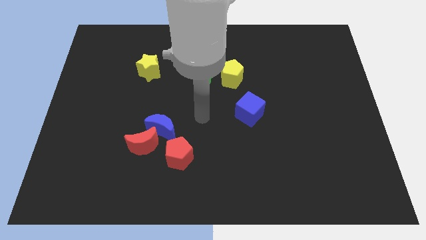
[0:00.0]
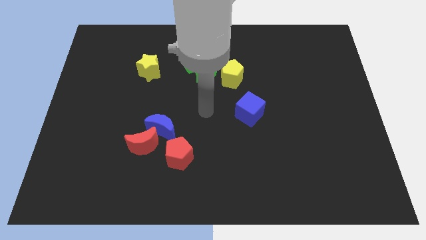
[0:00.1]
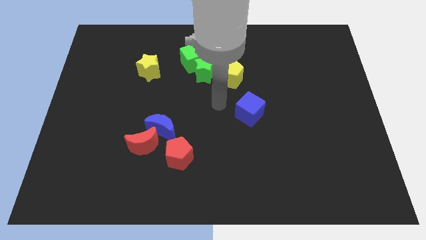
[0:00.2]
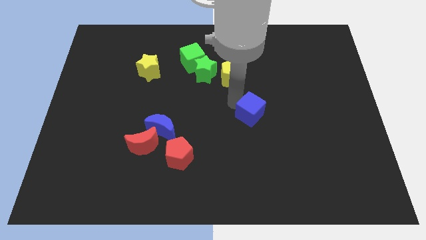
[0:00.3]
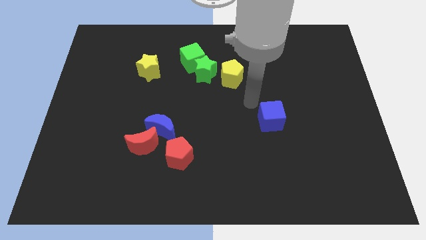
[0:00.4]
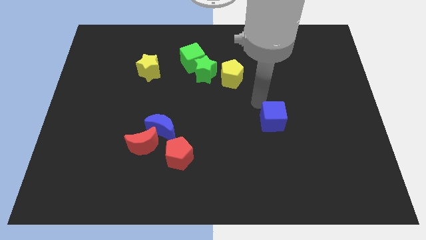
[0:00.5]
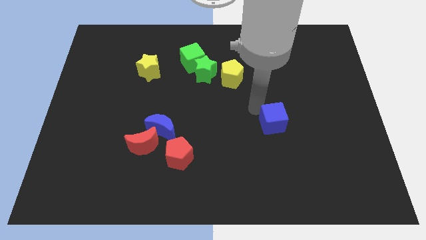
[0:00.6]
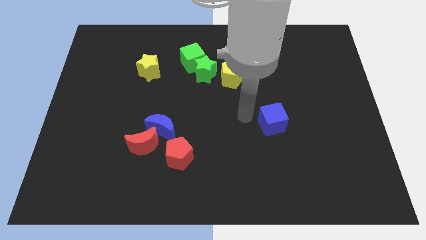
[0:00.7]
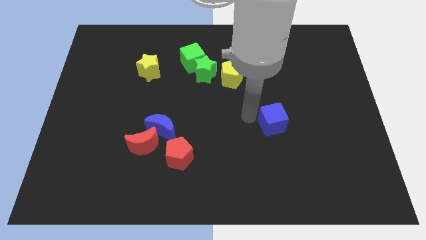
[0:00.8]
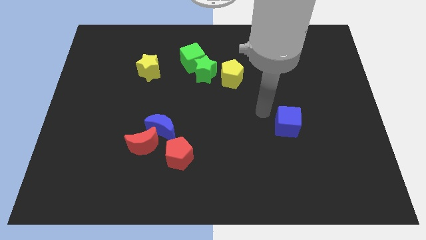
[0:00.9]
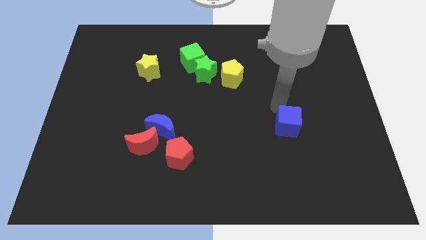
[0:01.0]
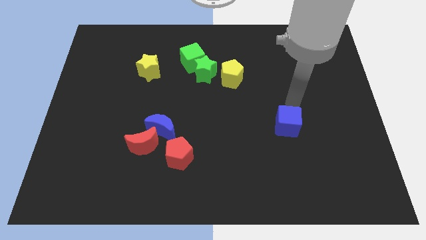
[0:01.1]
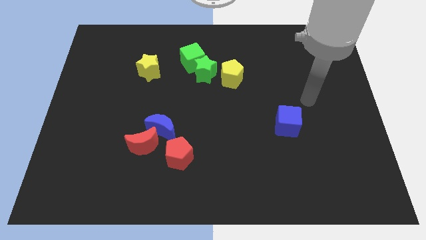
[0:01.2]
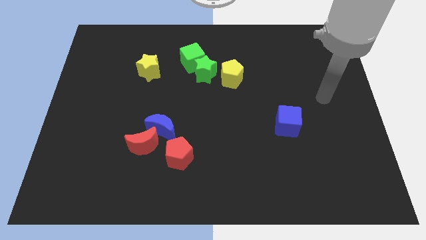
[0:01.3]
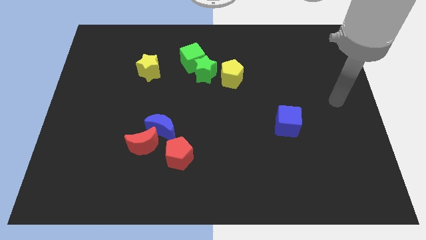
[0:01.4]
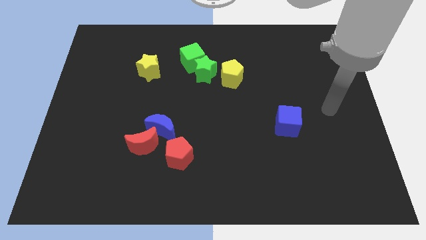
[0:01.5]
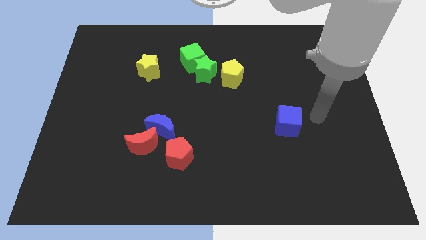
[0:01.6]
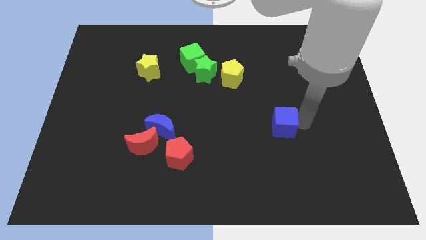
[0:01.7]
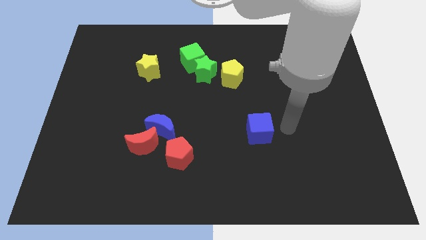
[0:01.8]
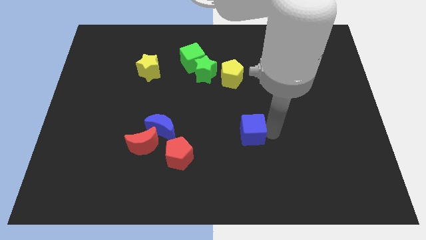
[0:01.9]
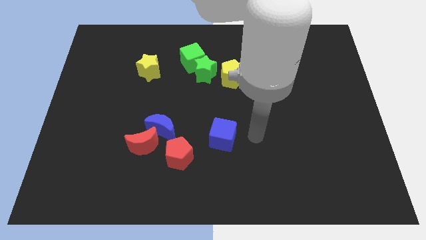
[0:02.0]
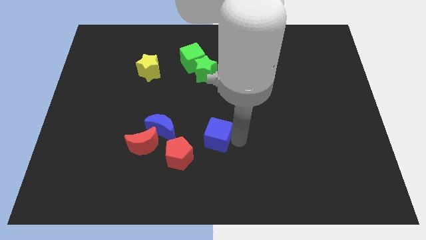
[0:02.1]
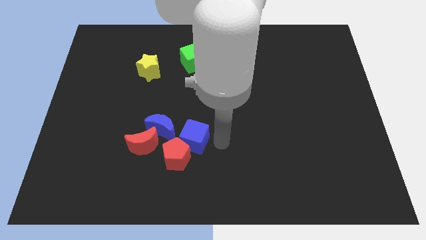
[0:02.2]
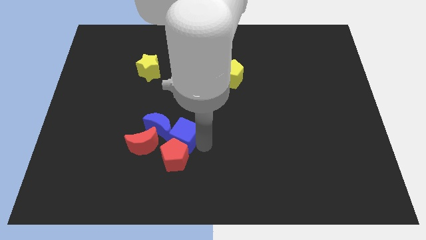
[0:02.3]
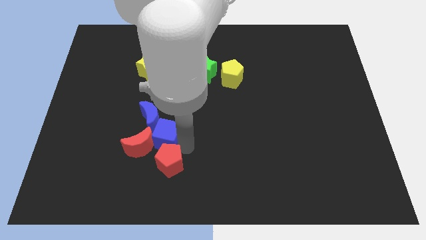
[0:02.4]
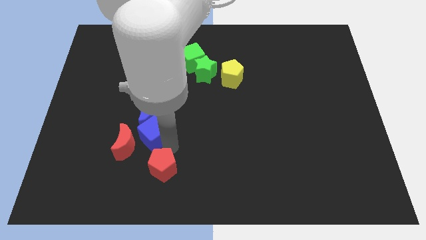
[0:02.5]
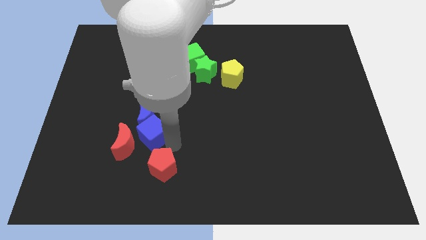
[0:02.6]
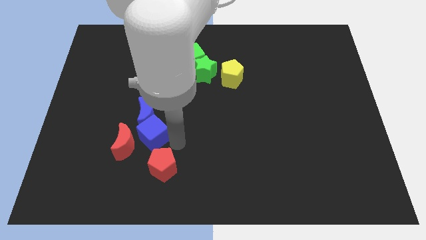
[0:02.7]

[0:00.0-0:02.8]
push the blue cube into bottom of the blue crescent

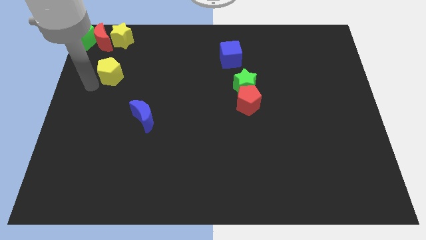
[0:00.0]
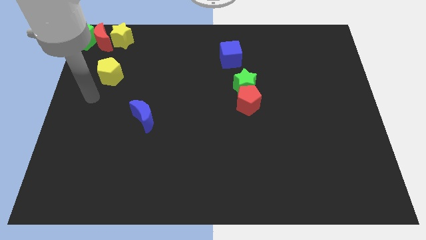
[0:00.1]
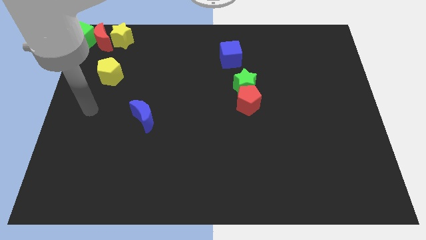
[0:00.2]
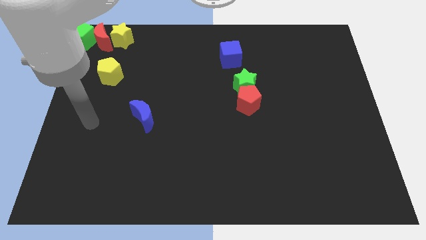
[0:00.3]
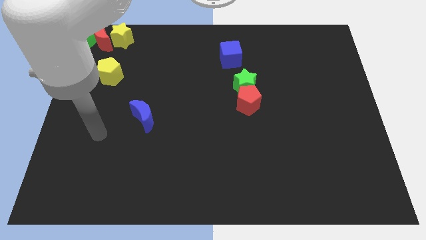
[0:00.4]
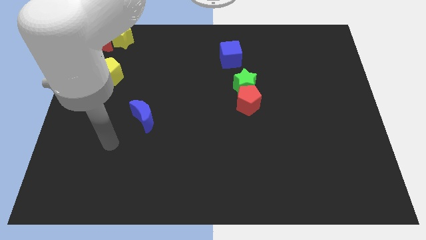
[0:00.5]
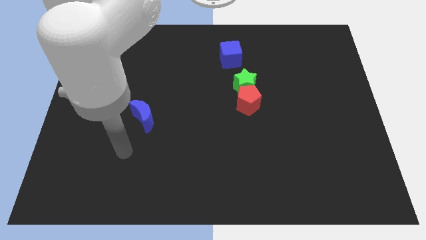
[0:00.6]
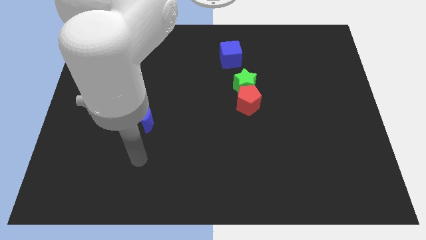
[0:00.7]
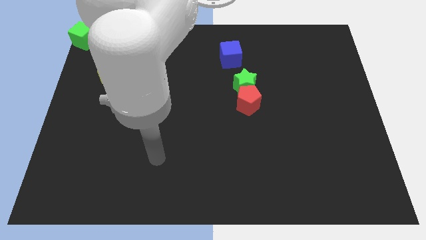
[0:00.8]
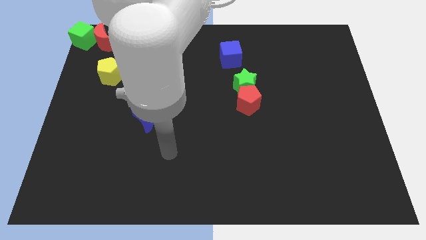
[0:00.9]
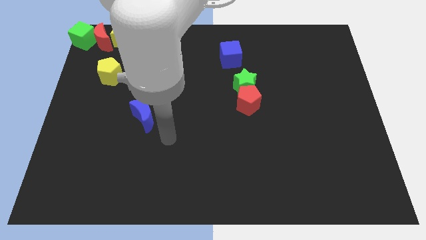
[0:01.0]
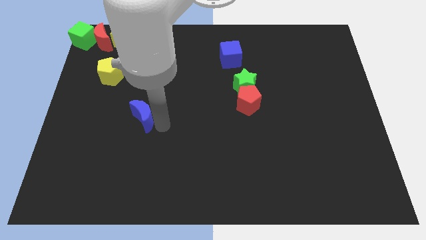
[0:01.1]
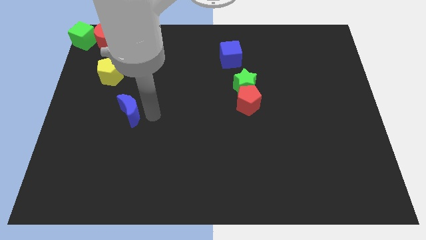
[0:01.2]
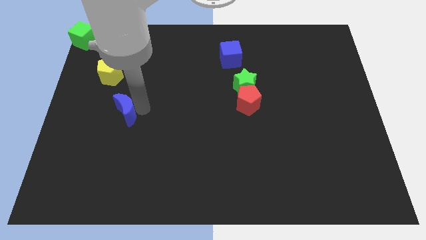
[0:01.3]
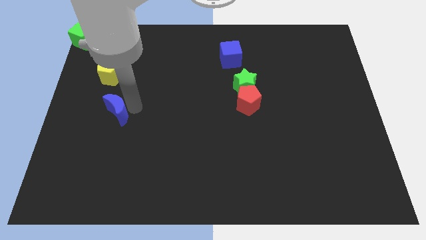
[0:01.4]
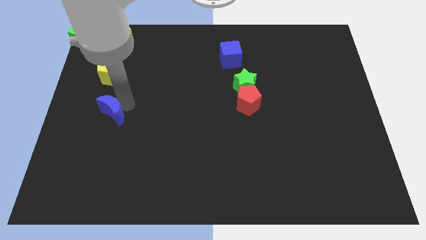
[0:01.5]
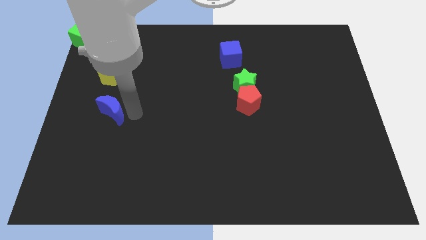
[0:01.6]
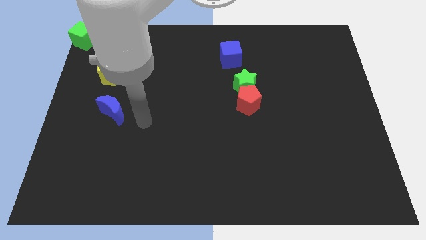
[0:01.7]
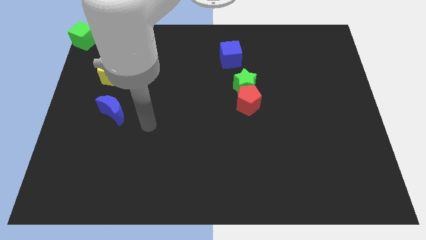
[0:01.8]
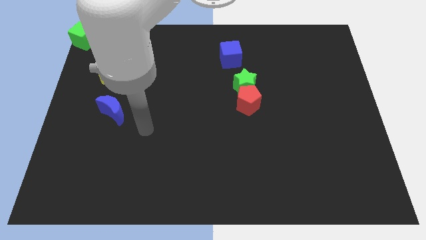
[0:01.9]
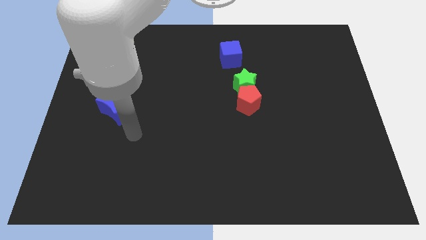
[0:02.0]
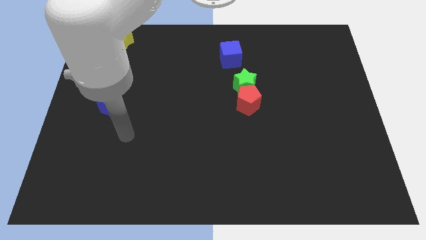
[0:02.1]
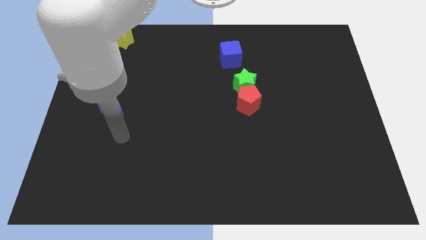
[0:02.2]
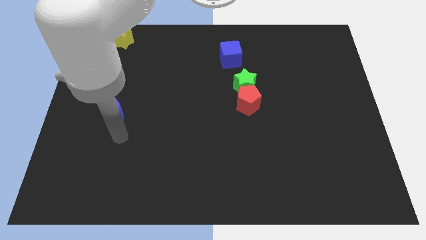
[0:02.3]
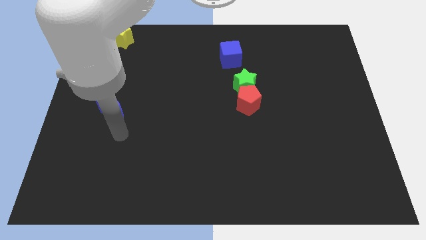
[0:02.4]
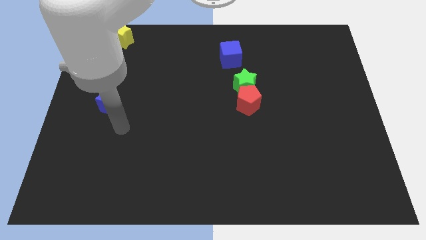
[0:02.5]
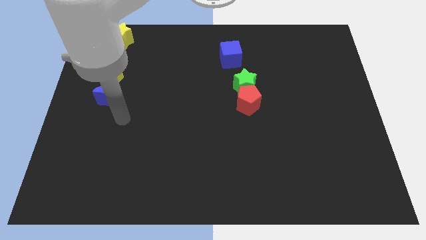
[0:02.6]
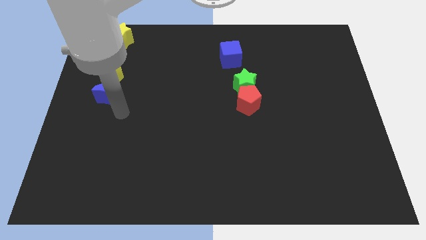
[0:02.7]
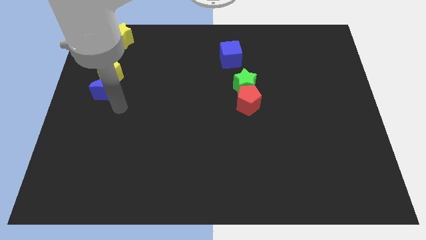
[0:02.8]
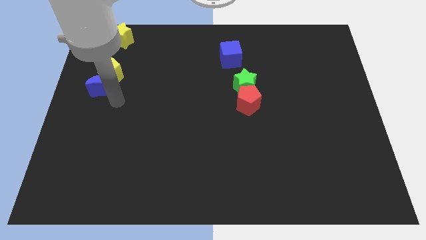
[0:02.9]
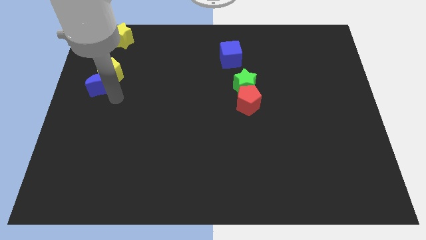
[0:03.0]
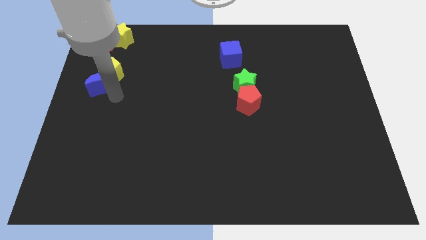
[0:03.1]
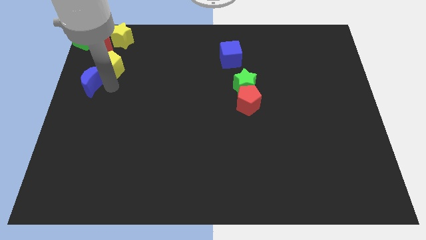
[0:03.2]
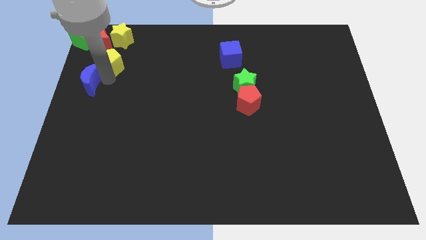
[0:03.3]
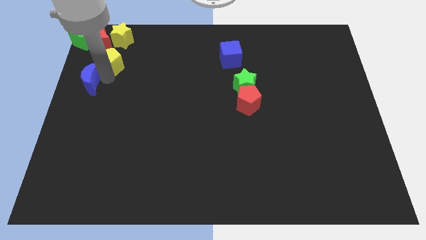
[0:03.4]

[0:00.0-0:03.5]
push the blue block into yellow pentagon

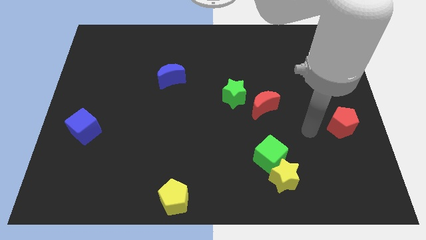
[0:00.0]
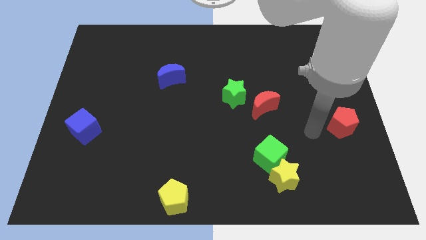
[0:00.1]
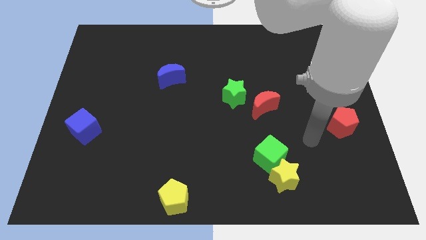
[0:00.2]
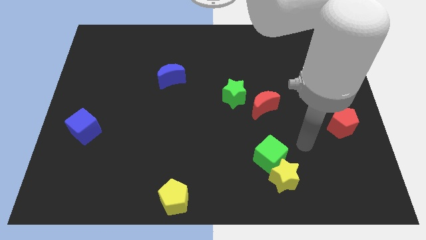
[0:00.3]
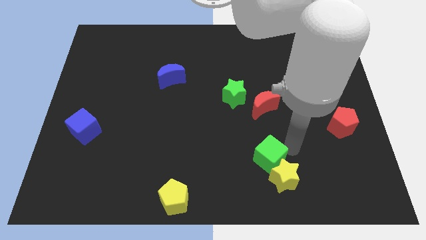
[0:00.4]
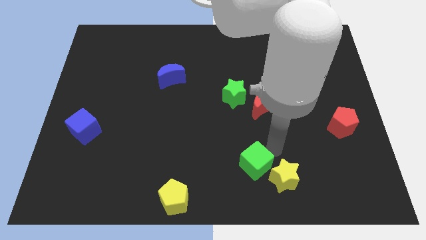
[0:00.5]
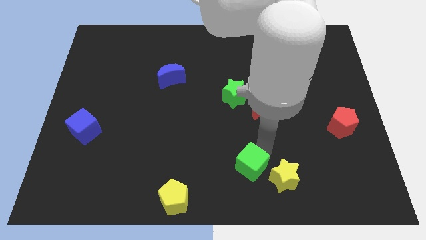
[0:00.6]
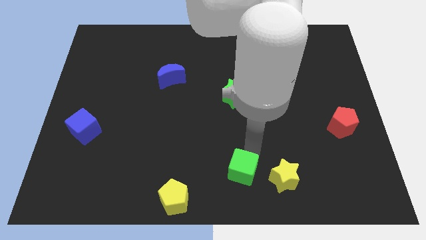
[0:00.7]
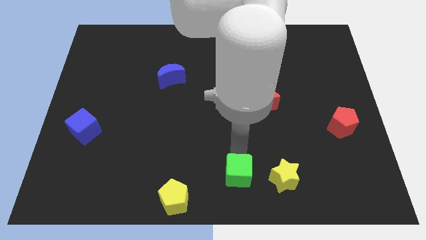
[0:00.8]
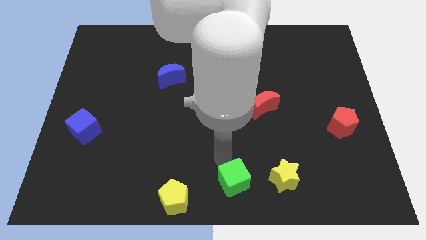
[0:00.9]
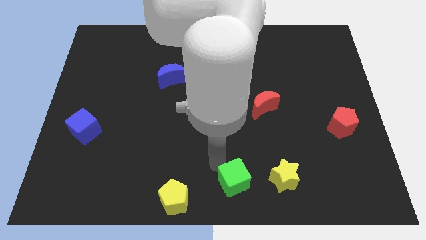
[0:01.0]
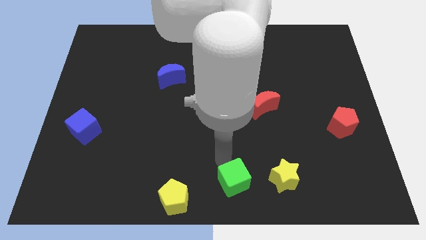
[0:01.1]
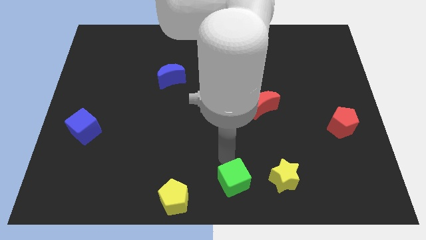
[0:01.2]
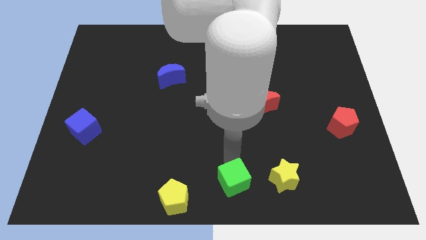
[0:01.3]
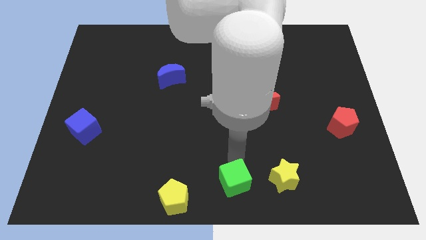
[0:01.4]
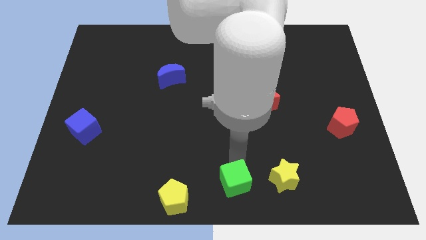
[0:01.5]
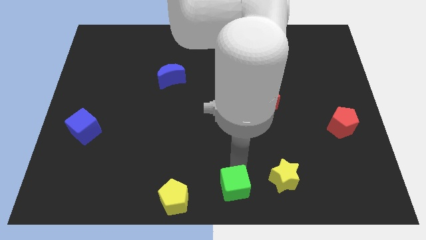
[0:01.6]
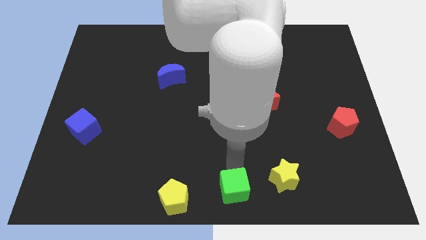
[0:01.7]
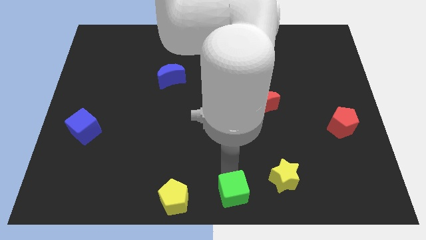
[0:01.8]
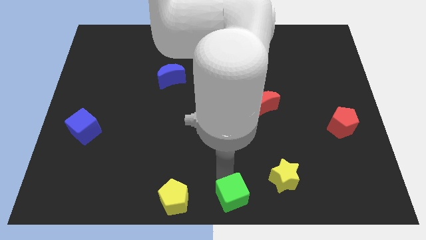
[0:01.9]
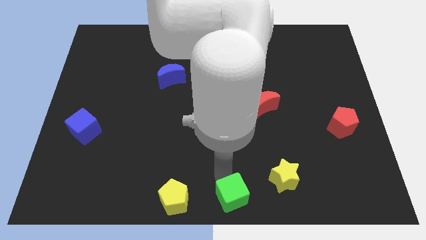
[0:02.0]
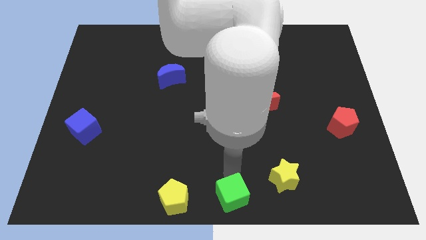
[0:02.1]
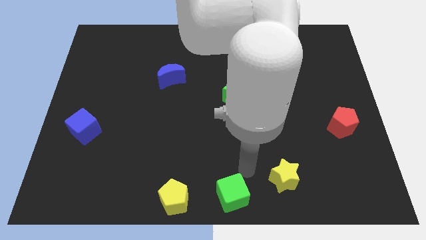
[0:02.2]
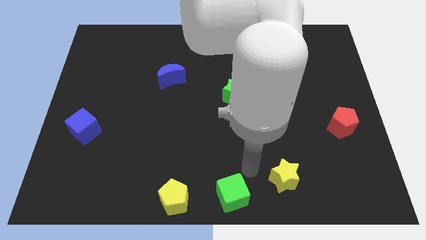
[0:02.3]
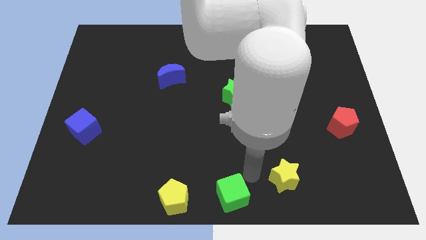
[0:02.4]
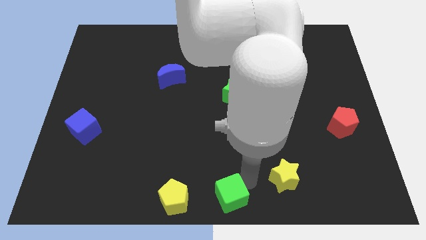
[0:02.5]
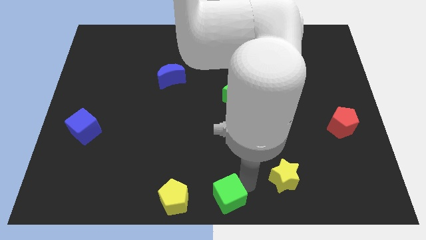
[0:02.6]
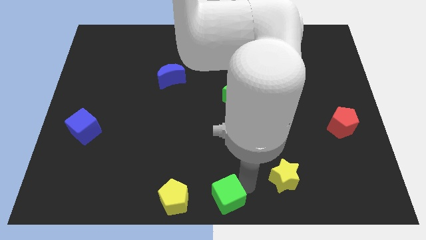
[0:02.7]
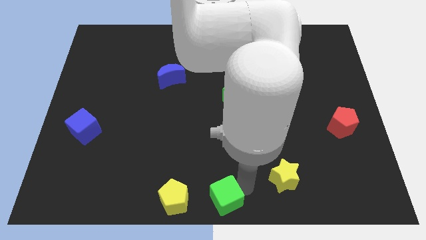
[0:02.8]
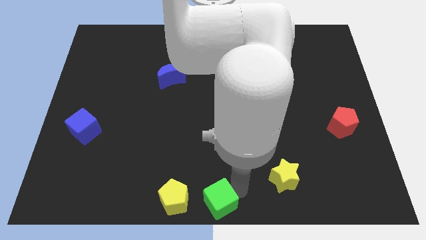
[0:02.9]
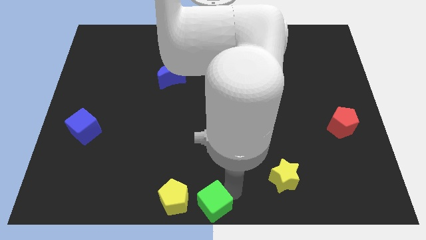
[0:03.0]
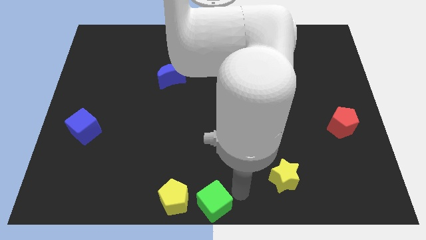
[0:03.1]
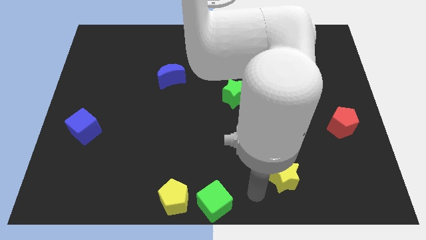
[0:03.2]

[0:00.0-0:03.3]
move the green cube to the right side of the yellow pentagon
